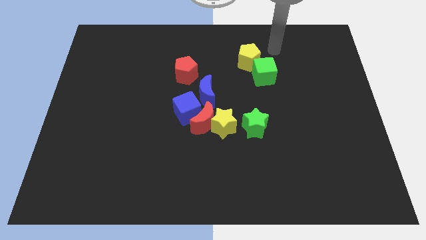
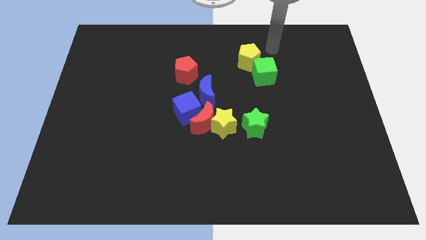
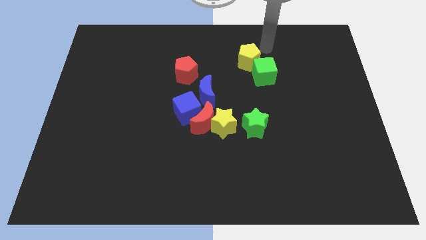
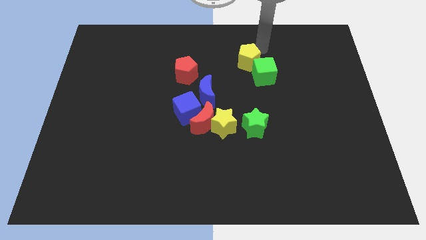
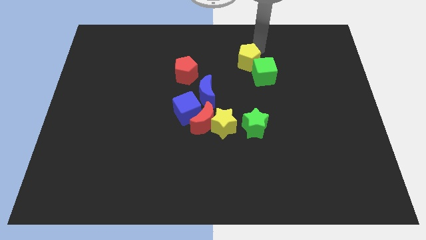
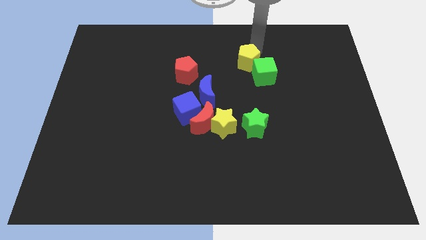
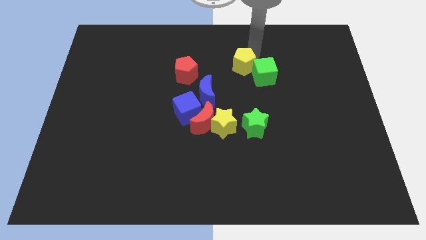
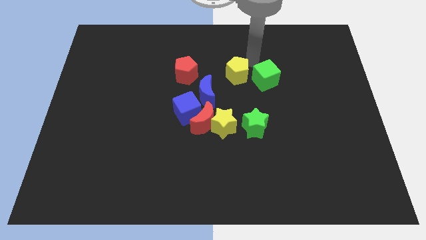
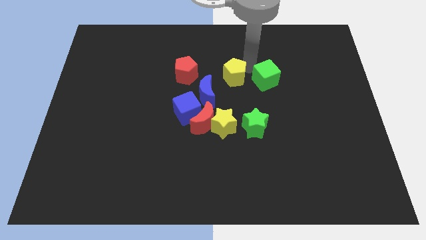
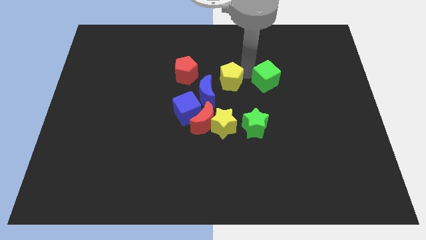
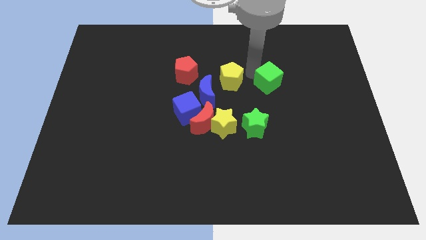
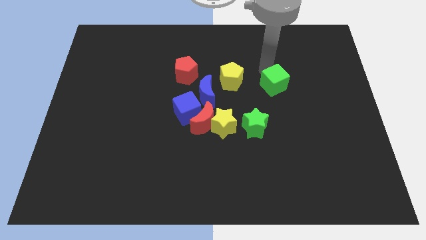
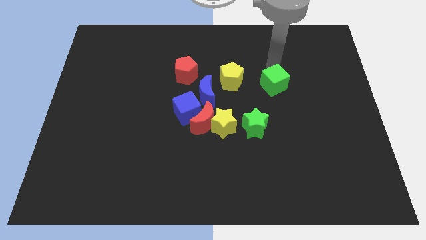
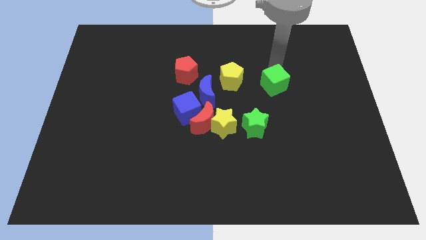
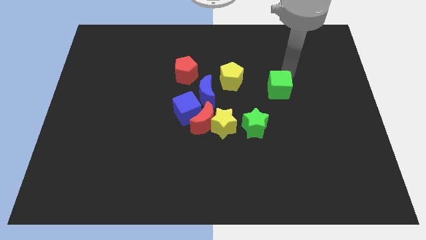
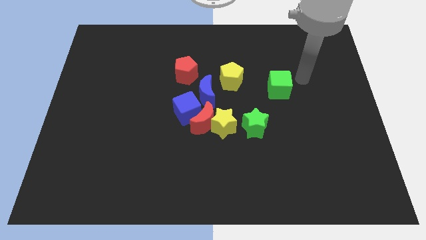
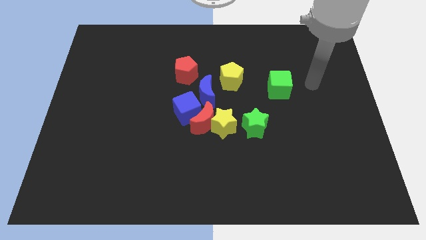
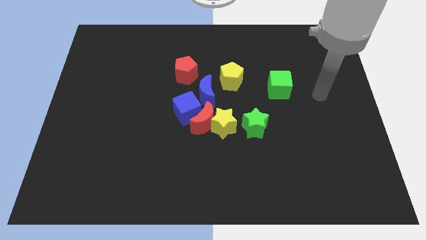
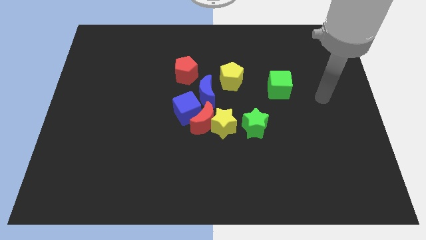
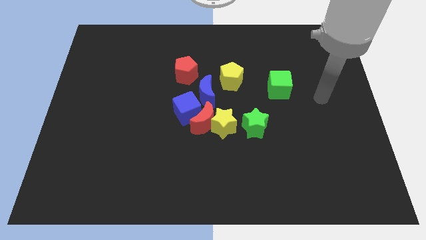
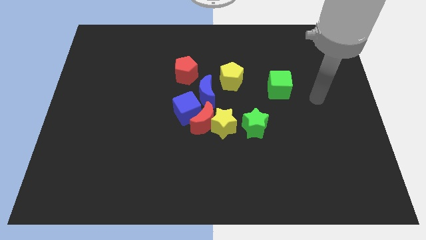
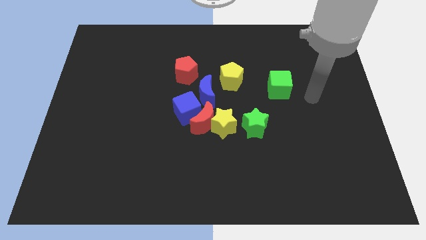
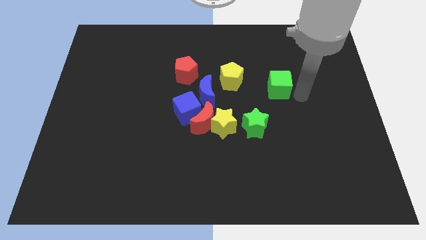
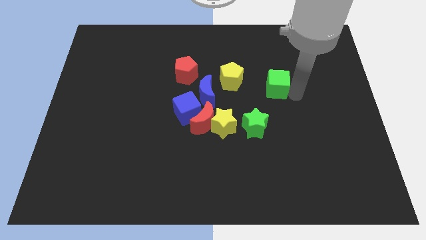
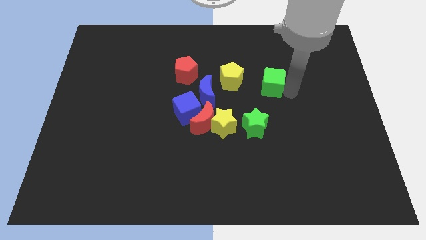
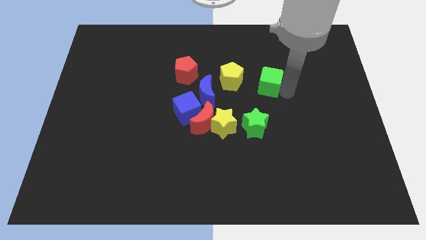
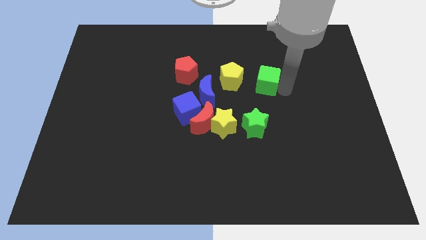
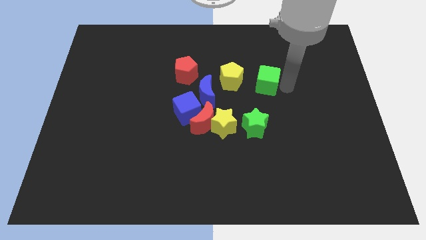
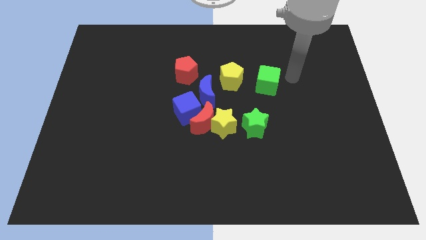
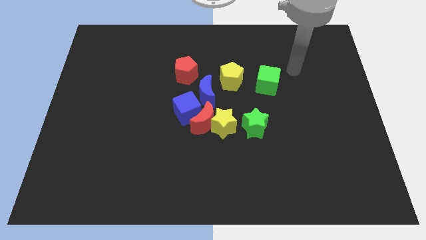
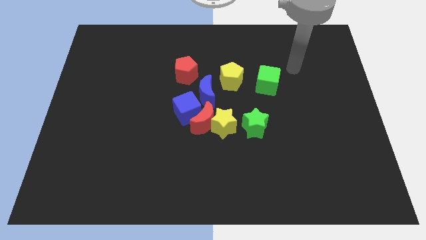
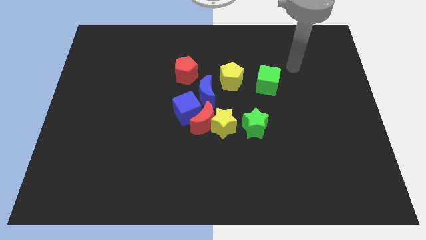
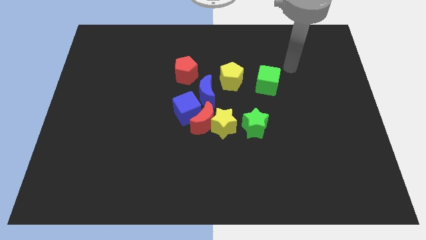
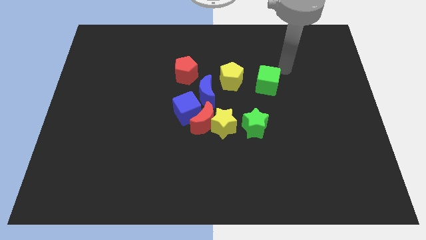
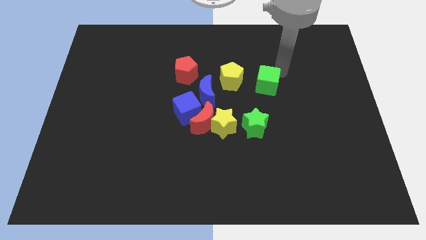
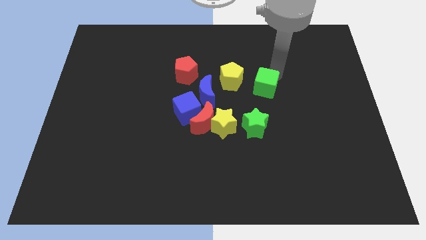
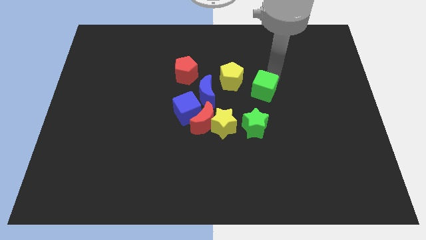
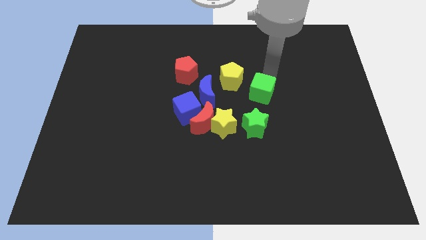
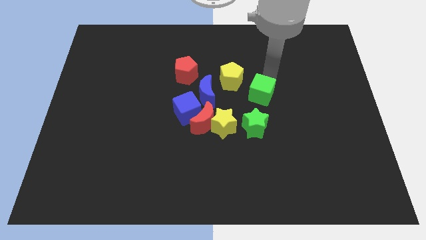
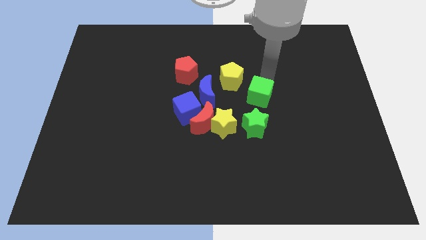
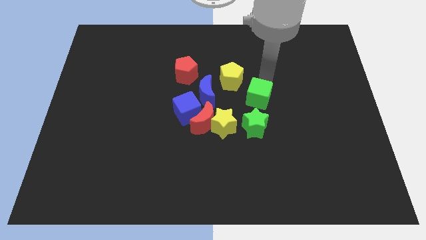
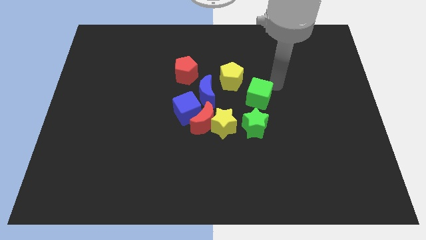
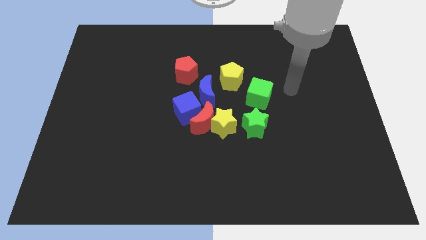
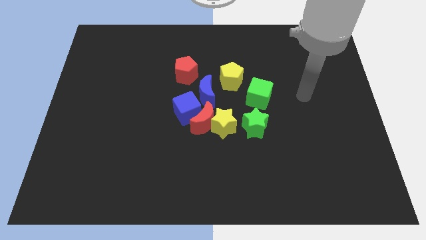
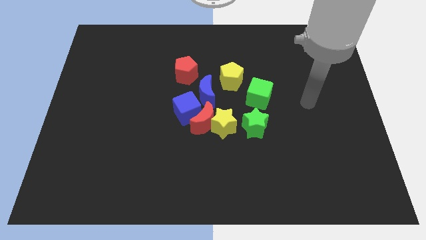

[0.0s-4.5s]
put the green cube at the top side of the green star

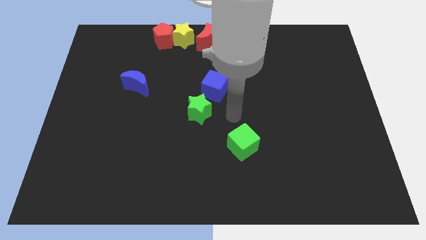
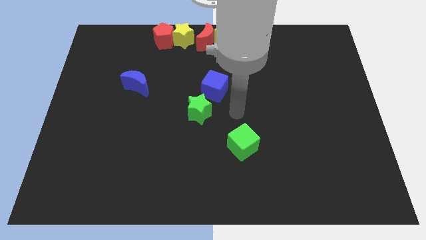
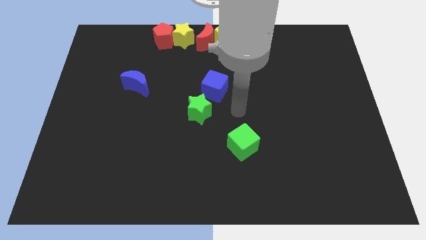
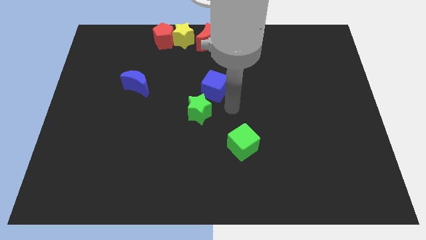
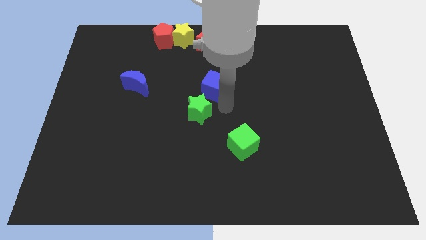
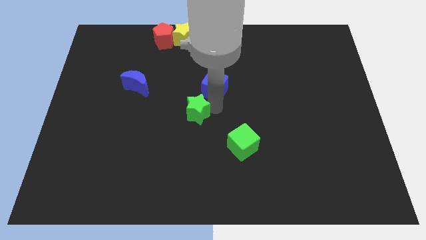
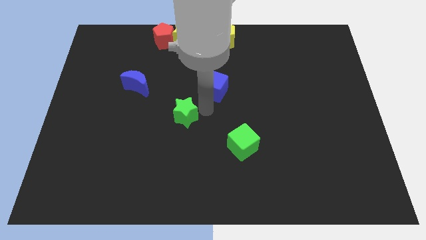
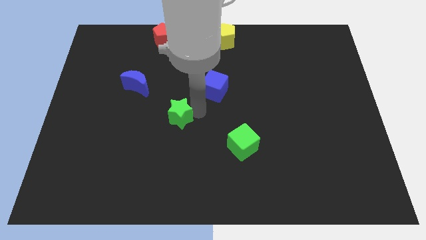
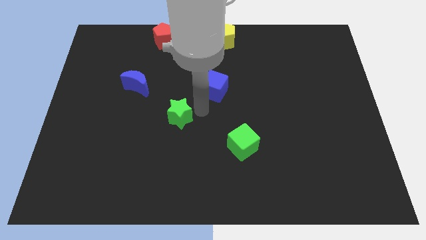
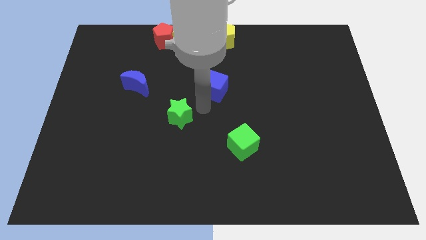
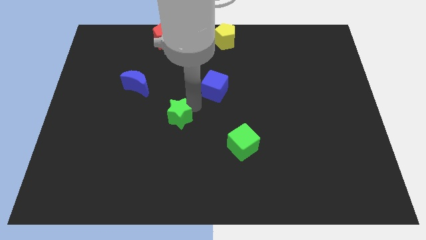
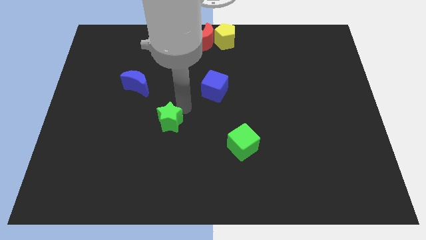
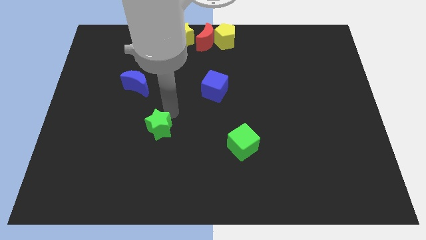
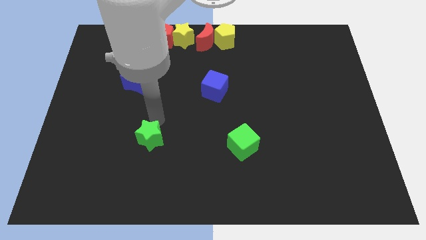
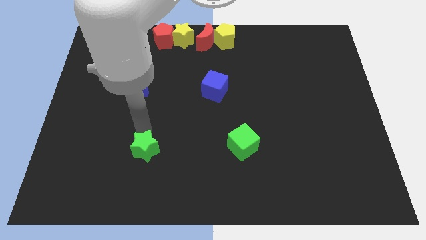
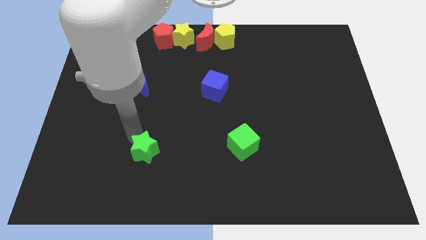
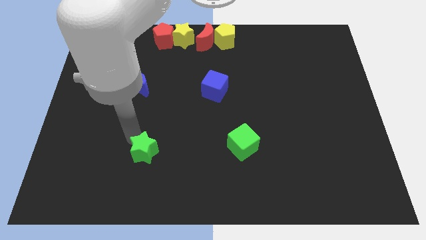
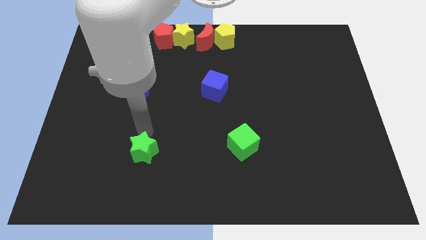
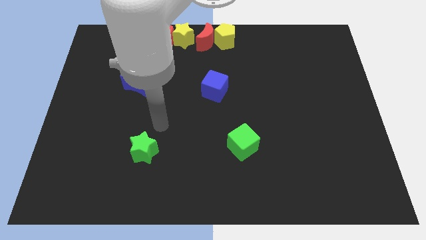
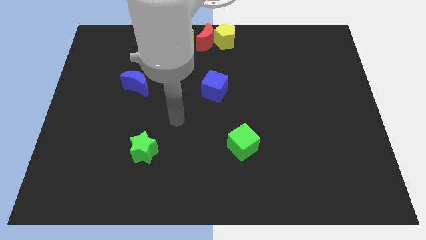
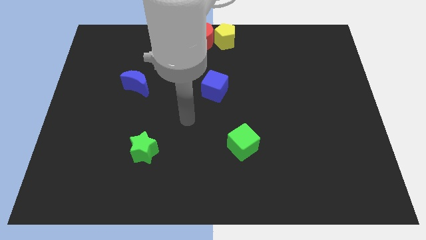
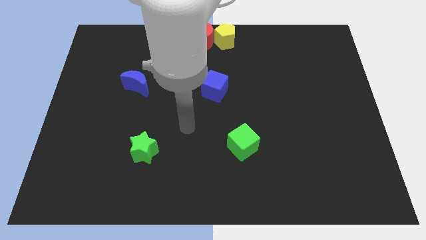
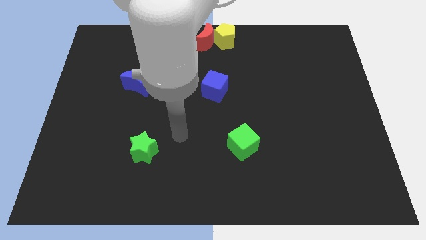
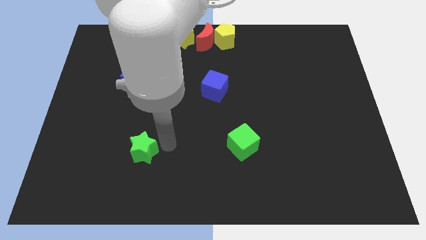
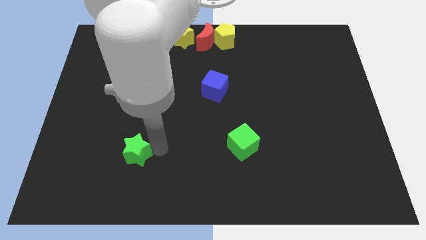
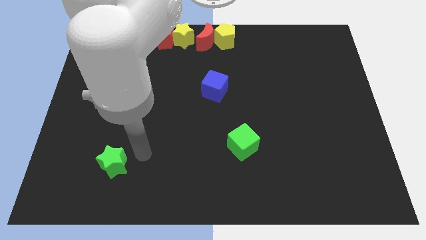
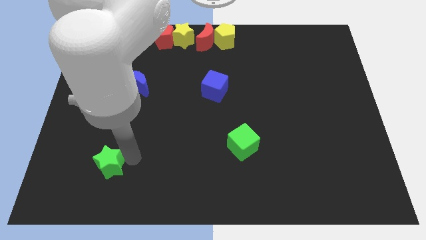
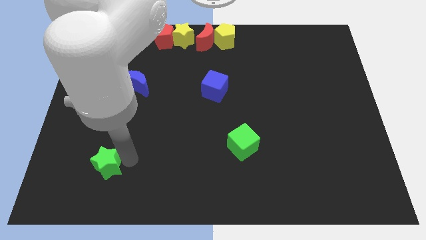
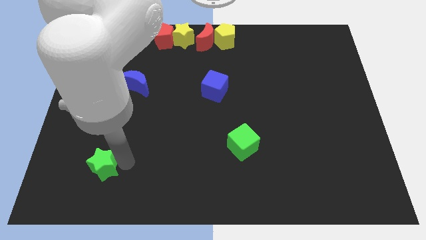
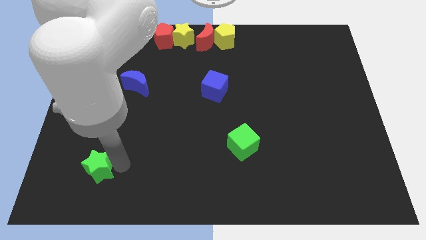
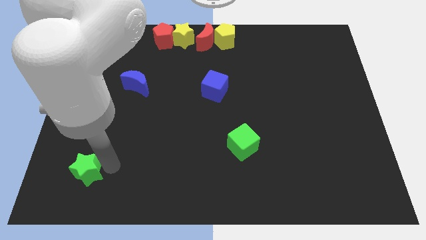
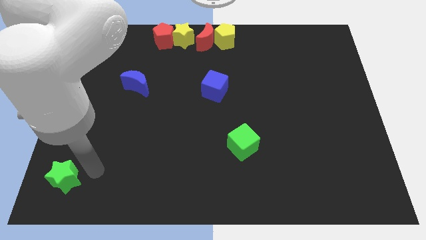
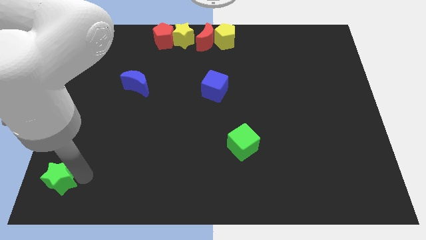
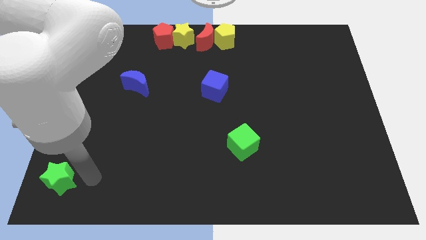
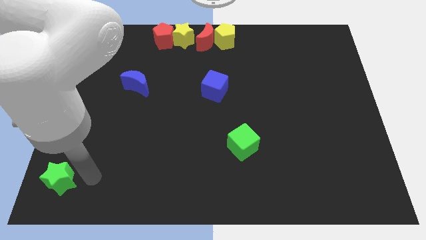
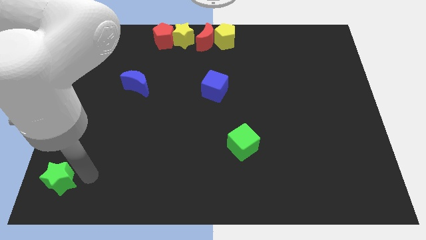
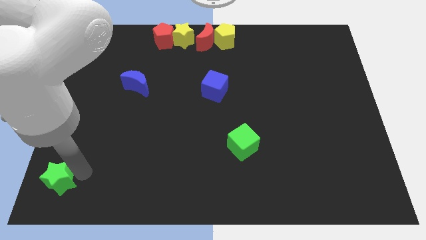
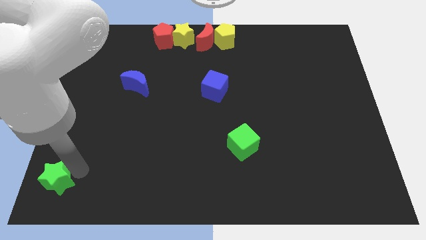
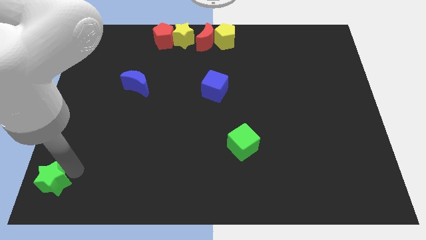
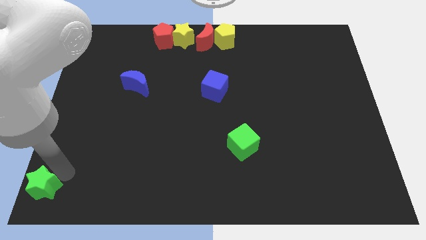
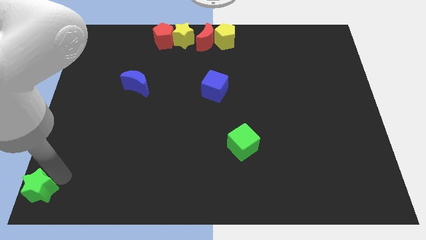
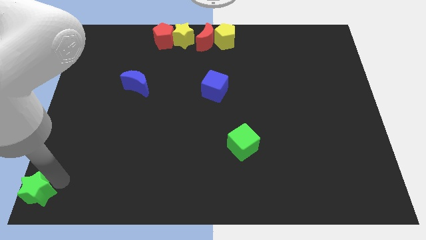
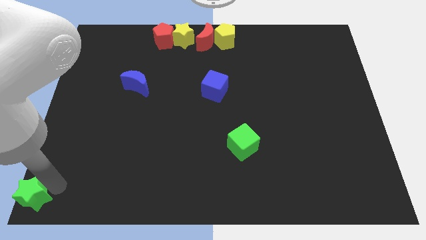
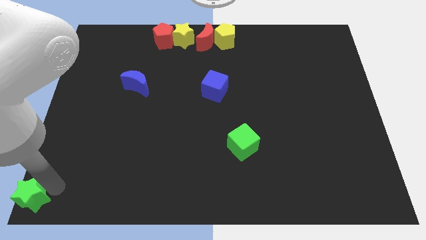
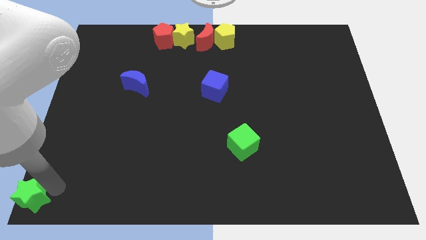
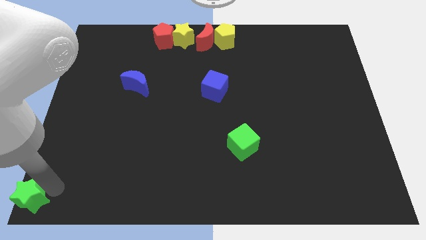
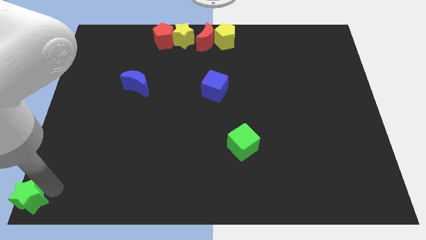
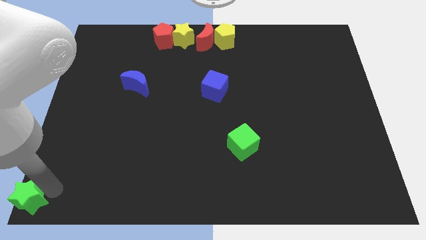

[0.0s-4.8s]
place the green star at the bottom left corner
